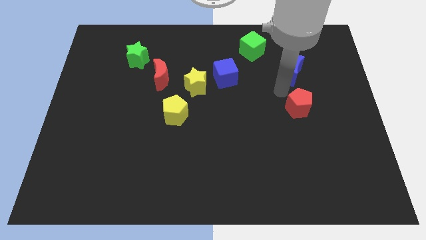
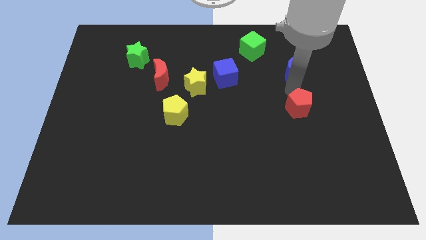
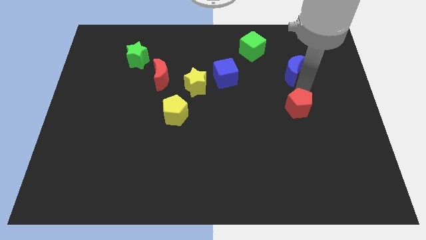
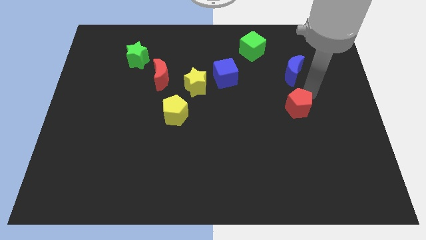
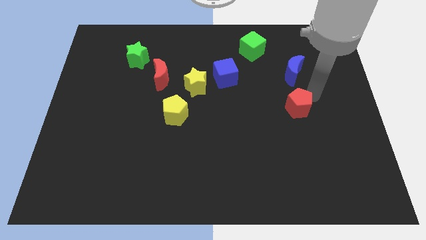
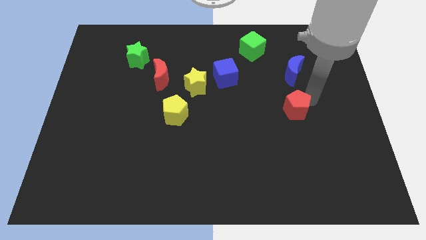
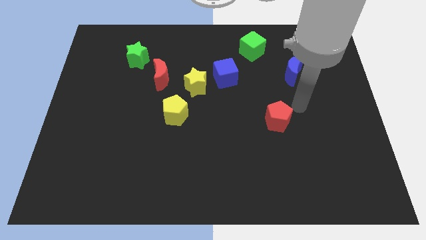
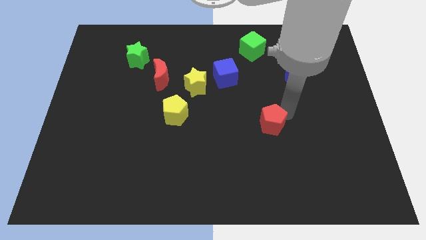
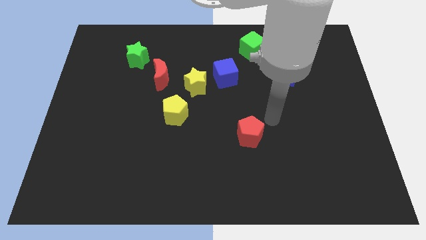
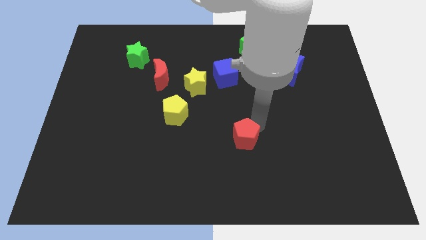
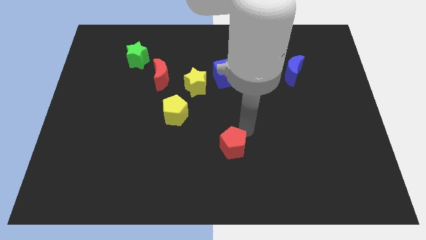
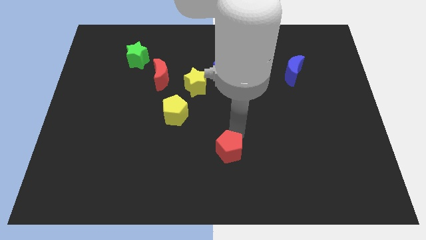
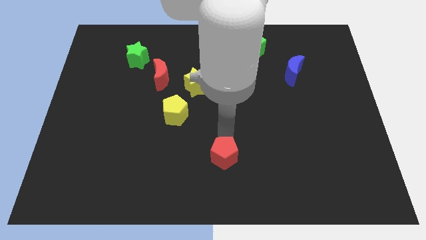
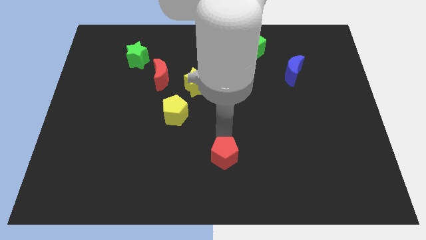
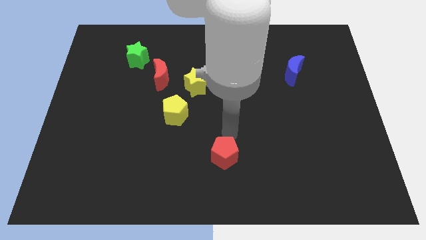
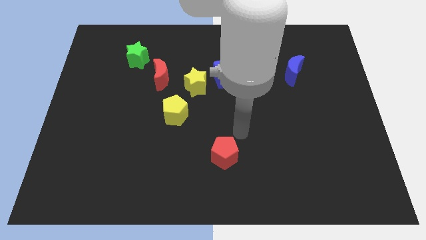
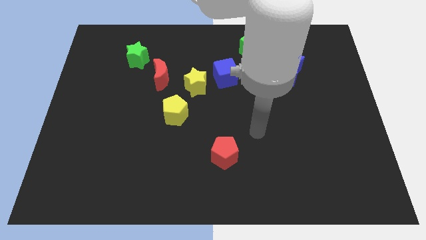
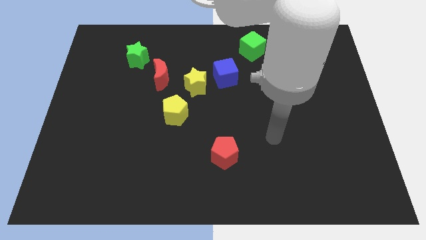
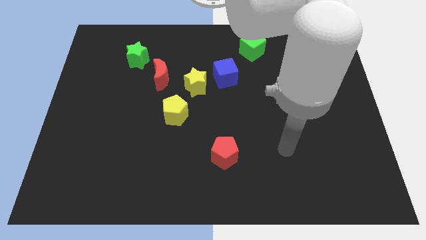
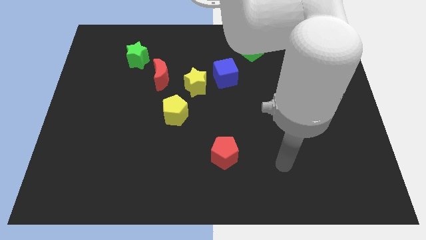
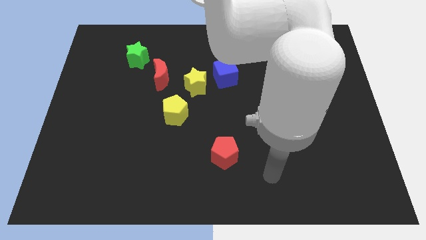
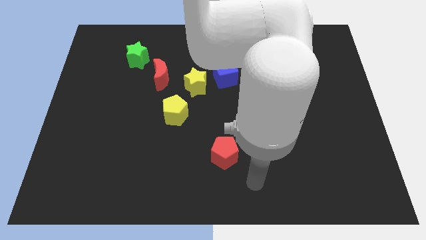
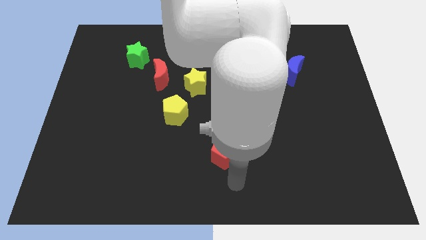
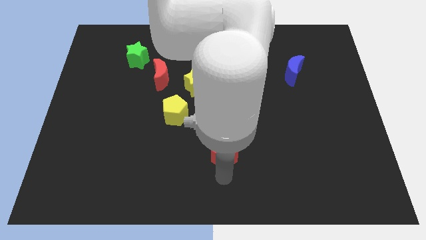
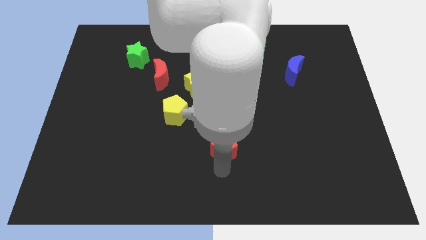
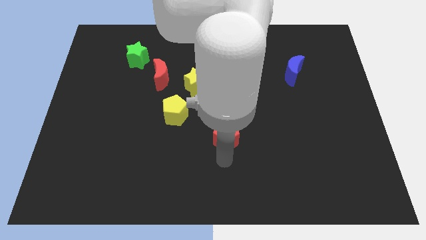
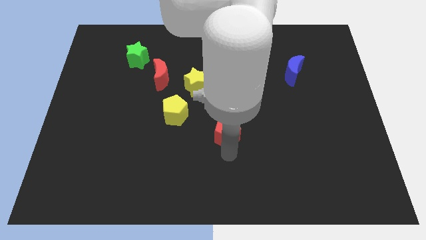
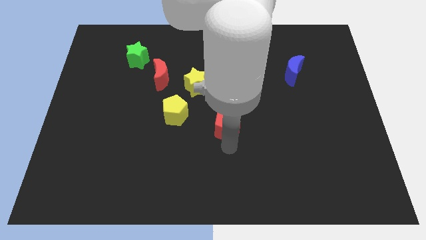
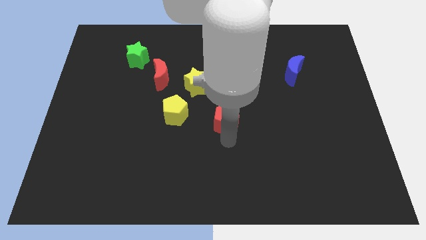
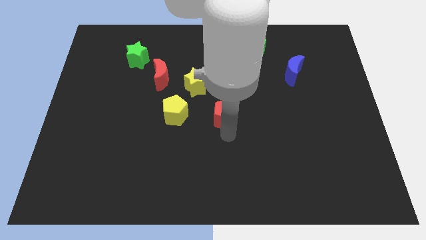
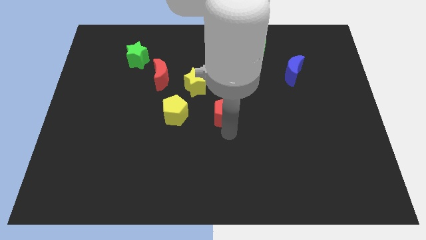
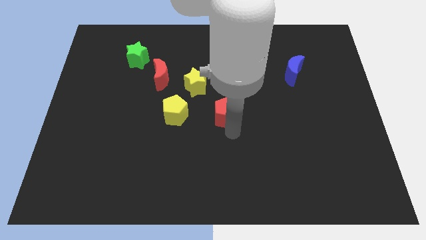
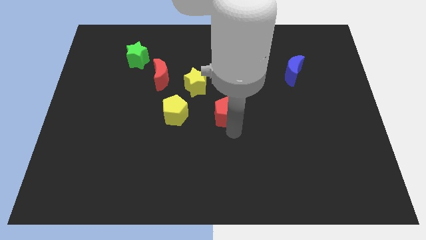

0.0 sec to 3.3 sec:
place the red pentagon parallel to yellow pentagon

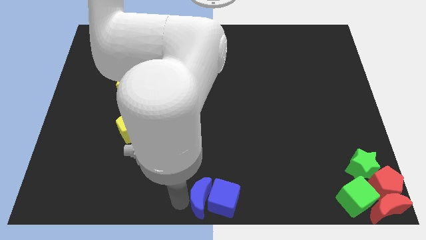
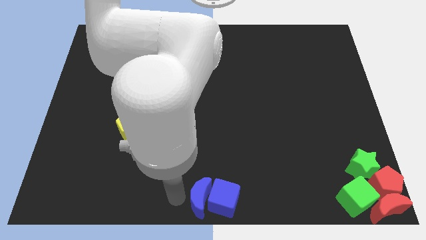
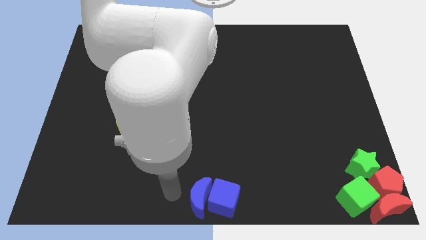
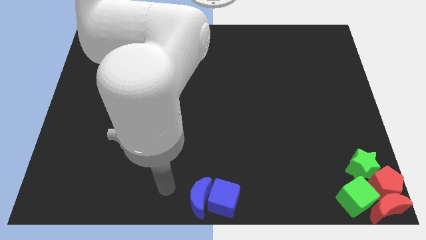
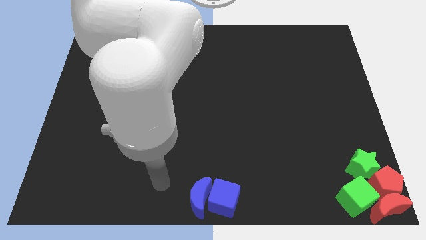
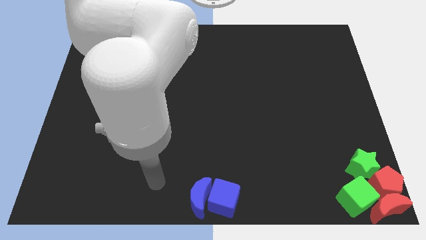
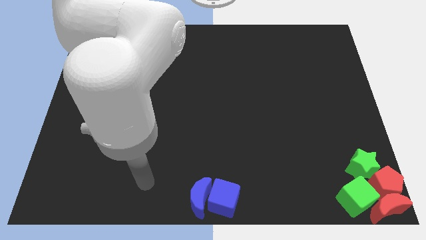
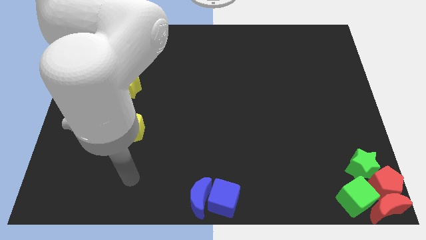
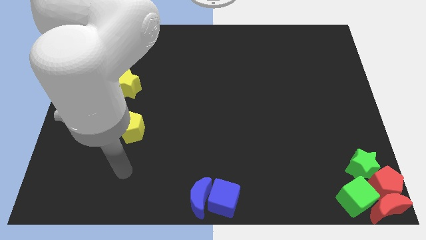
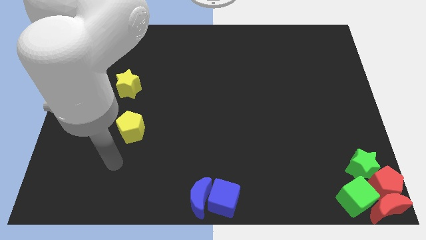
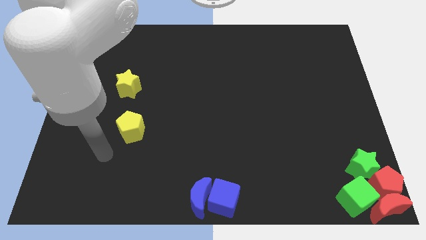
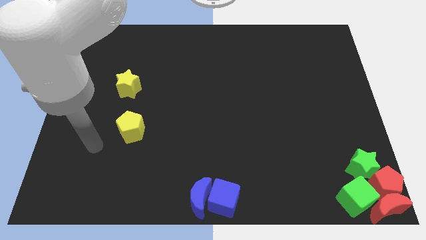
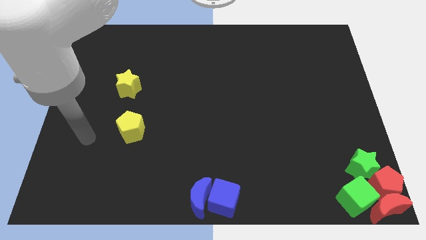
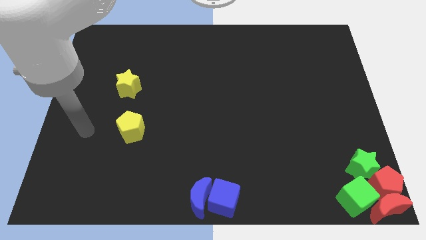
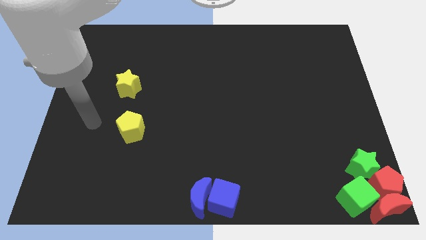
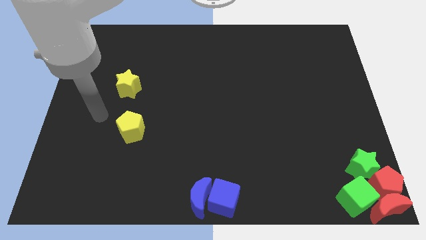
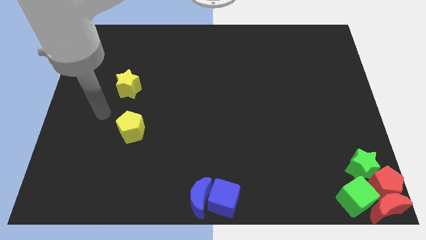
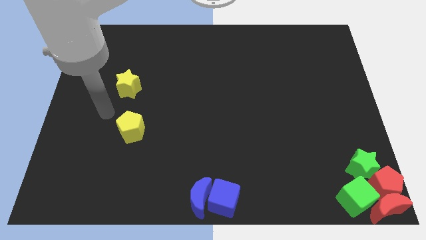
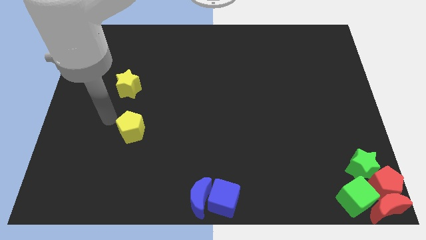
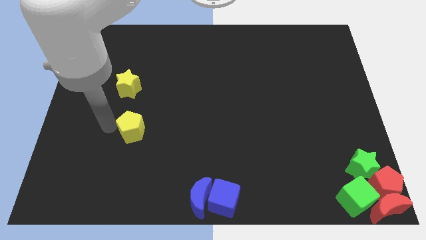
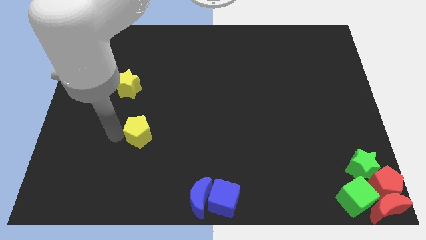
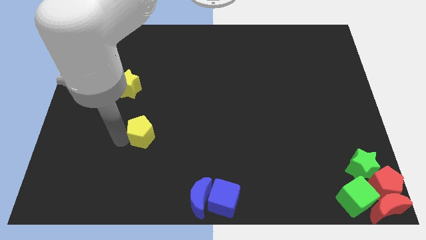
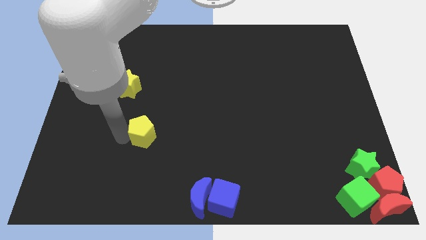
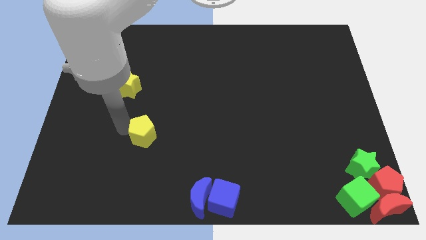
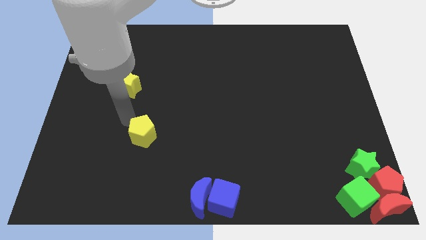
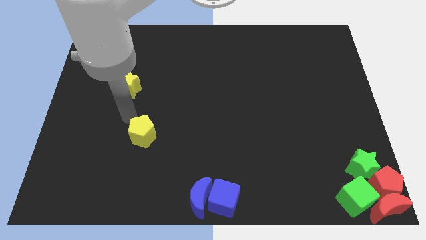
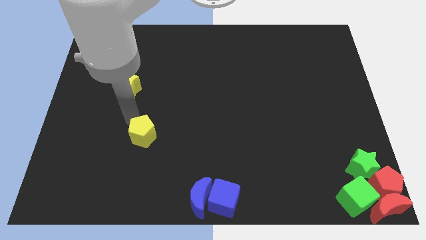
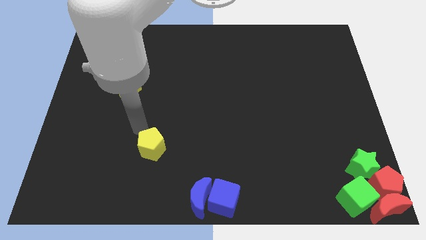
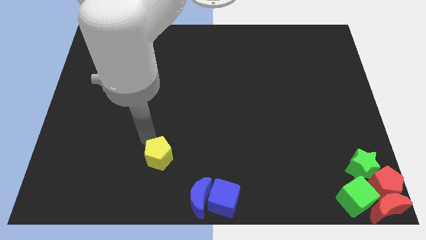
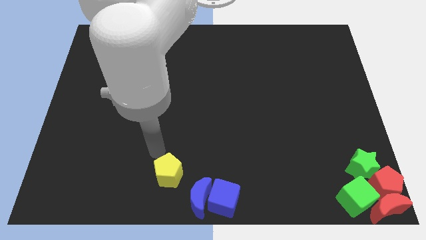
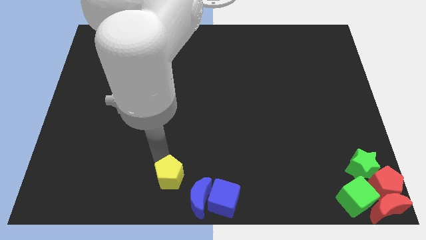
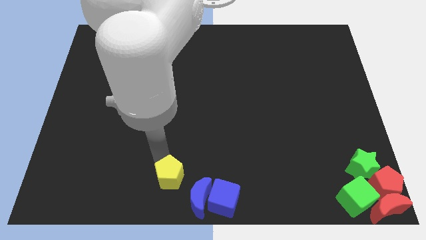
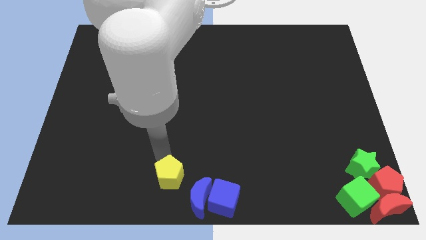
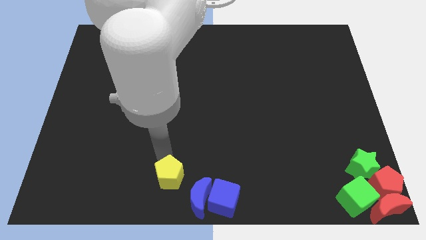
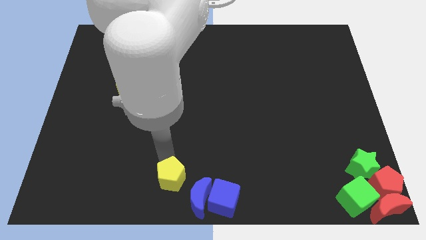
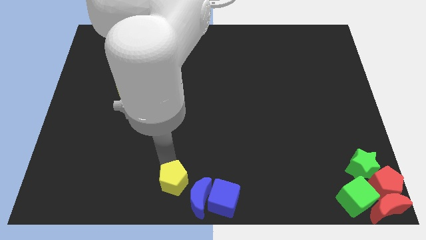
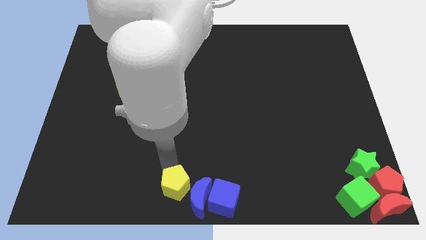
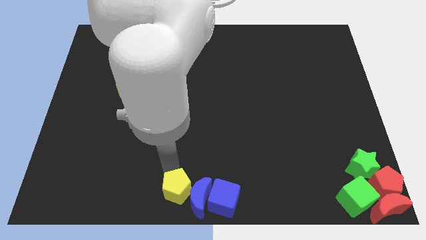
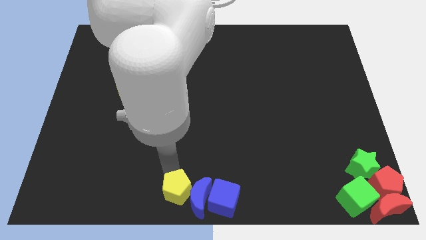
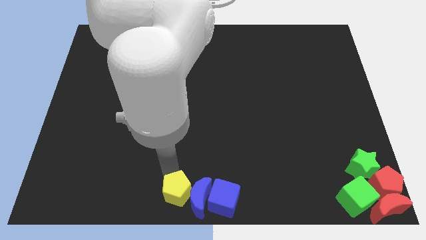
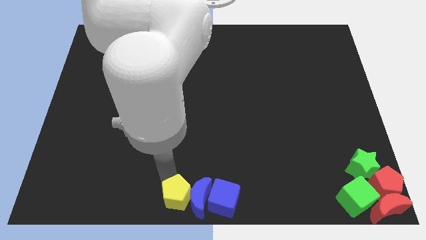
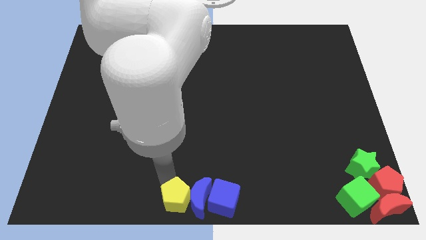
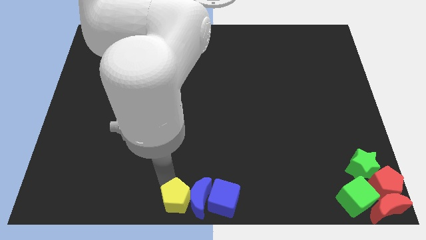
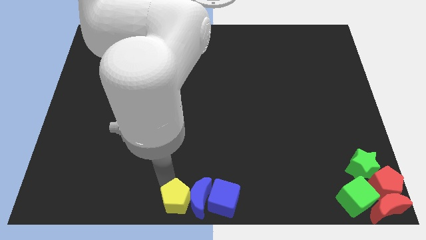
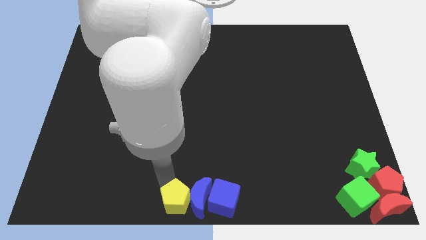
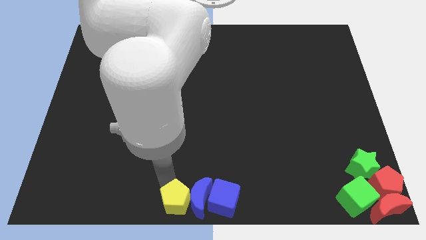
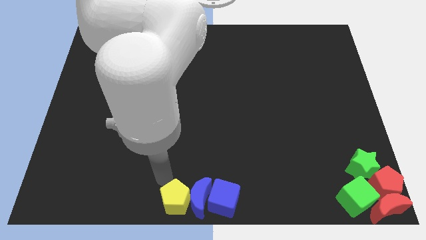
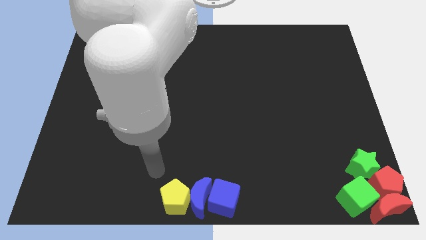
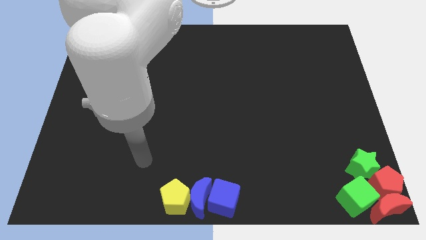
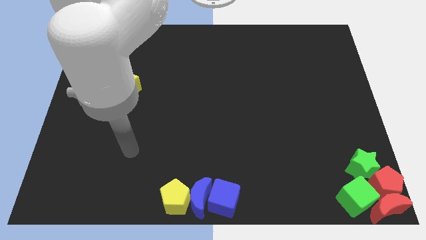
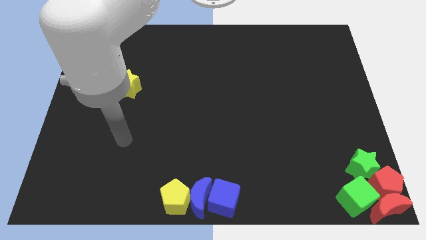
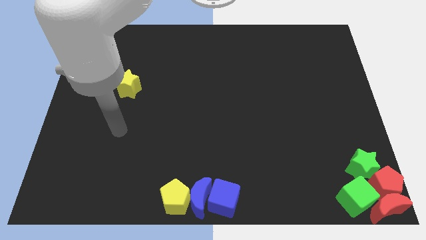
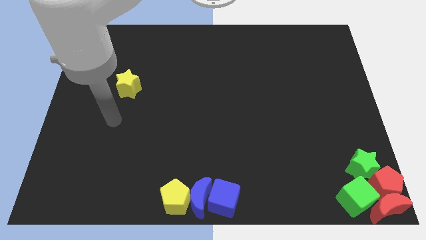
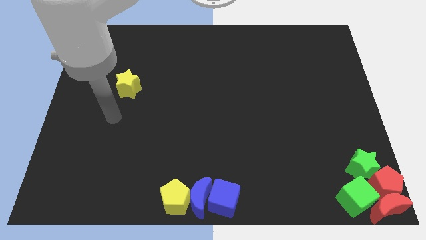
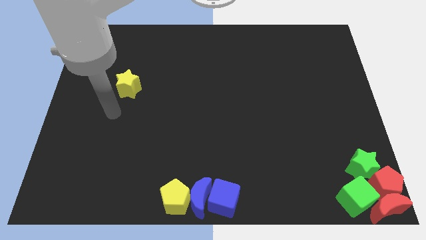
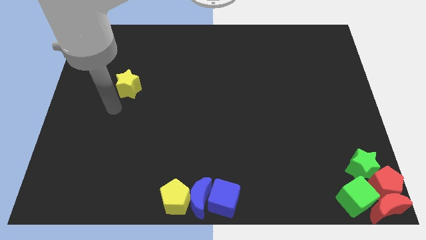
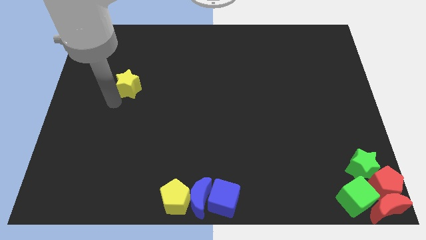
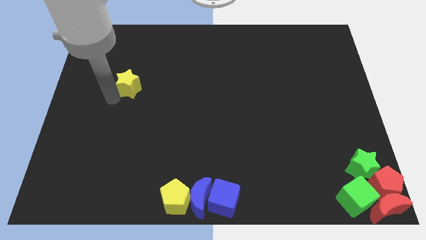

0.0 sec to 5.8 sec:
place the yellow pentagon left to the blue crescent
